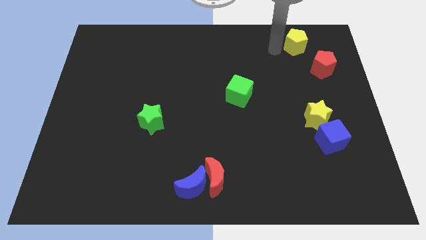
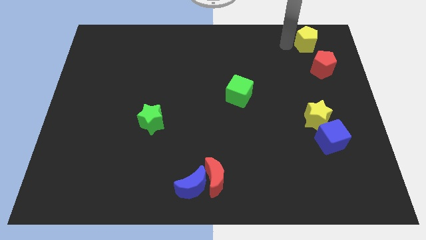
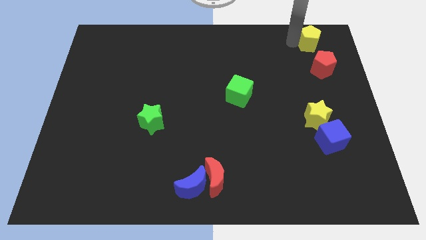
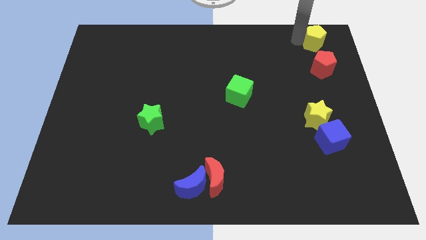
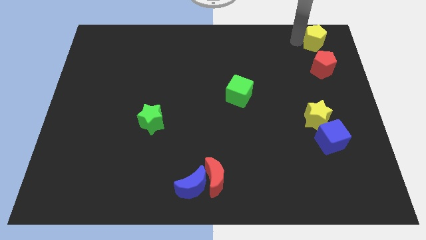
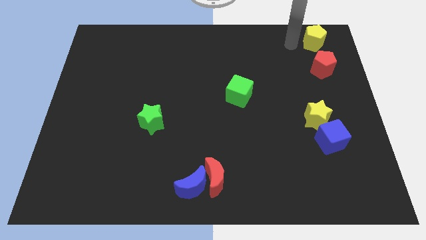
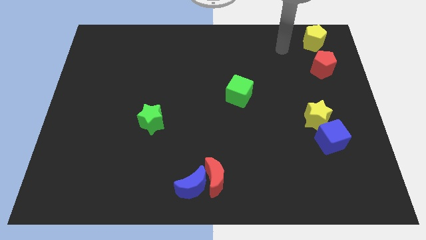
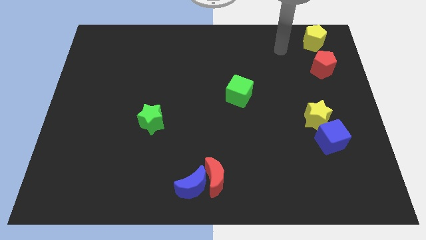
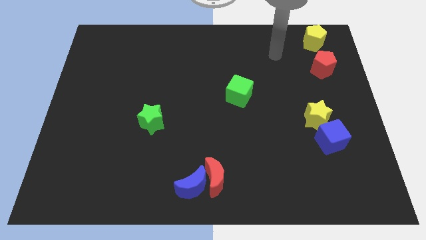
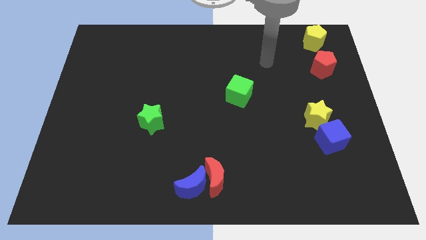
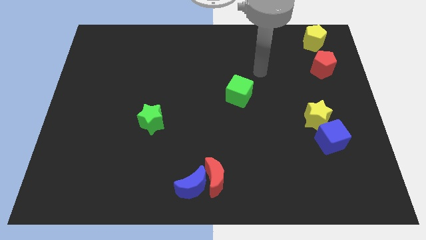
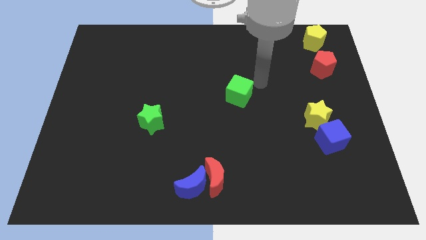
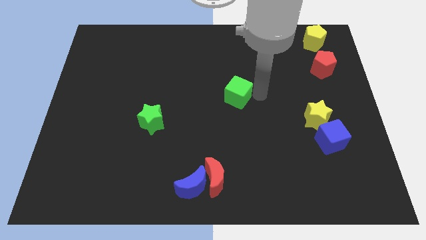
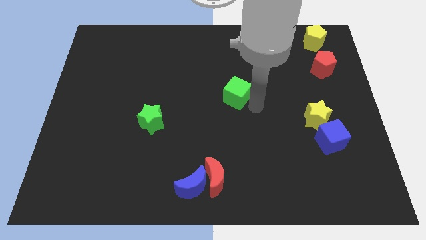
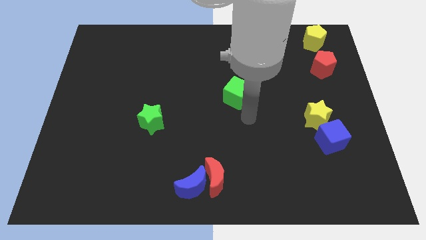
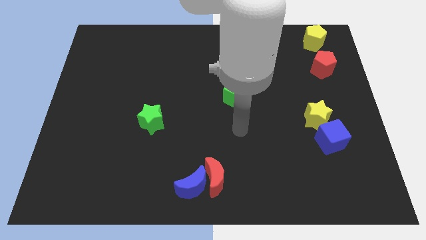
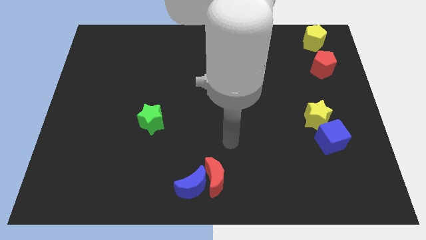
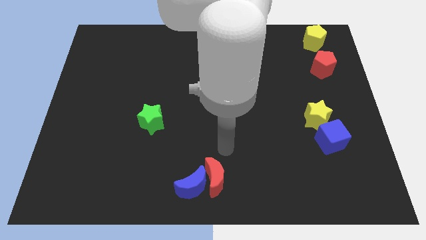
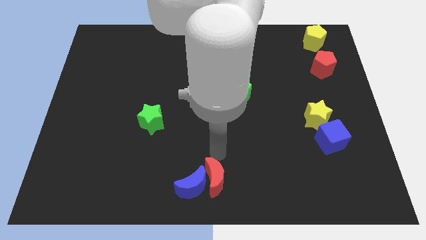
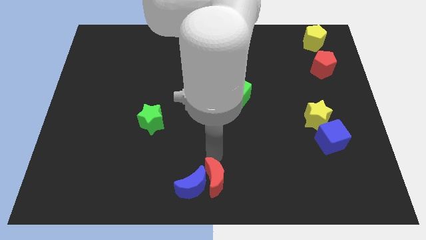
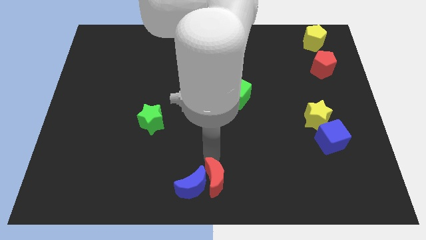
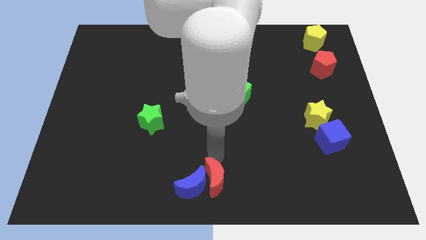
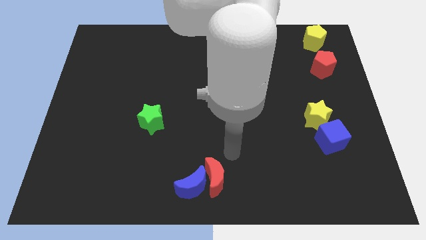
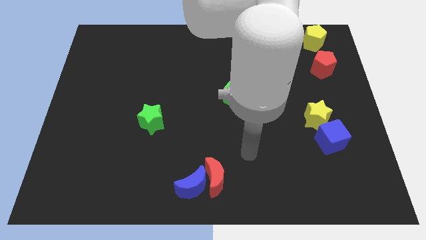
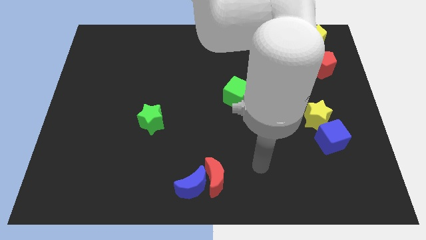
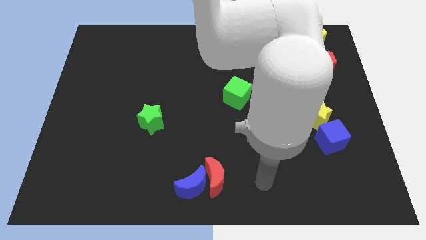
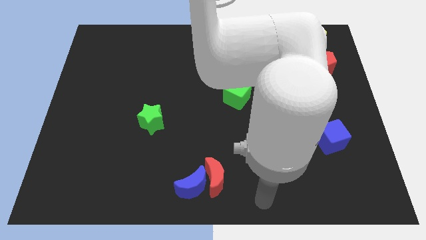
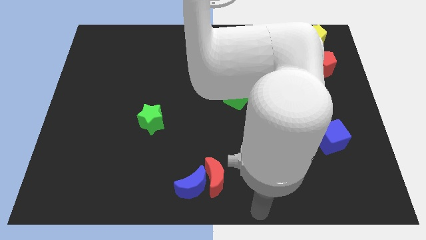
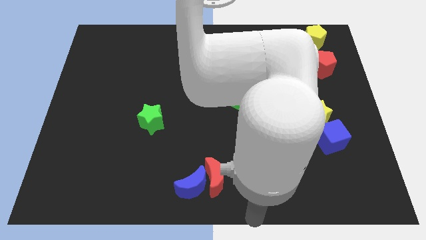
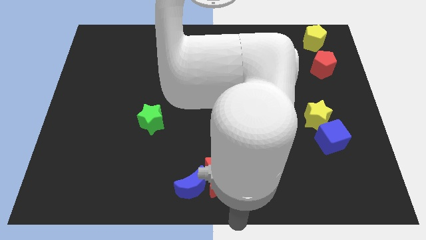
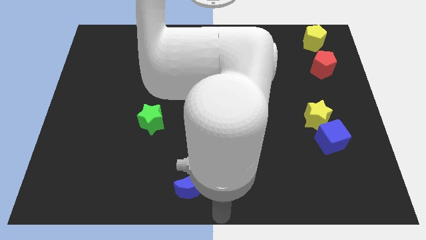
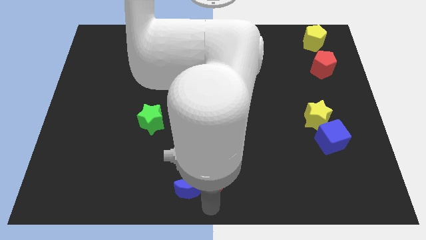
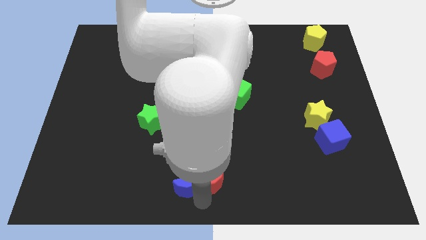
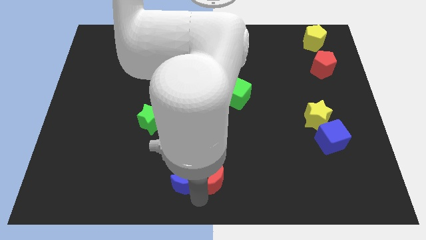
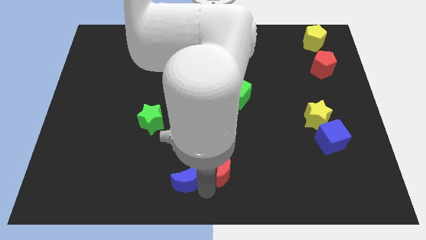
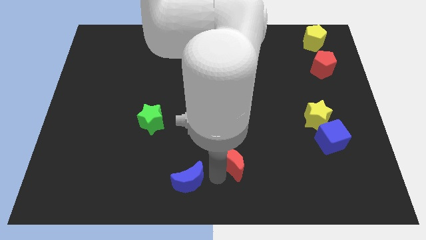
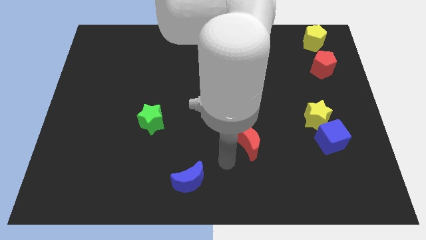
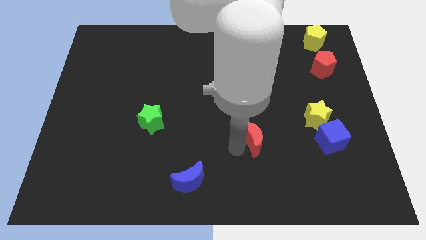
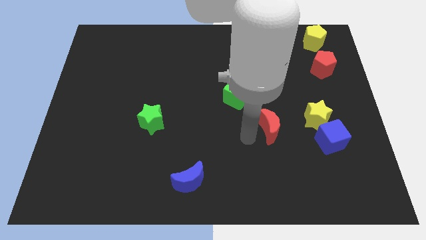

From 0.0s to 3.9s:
separate the red crescent from the blue crescent

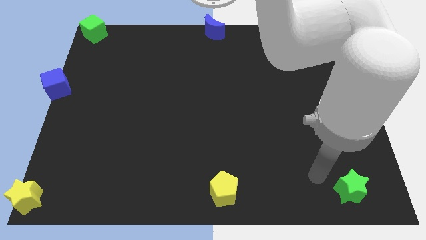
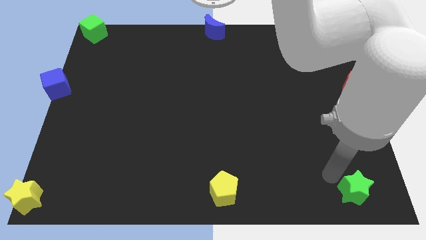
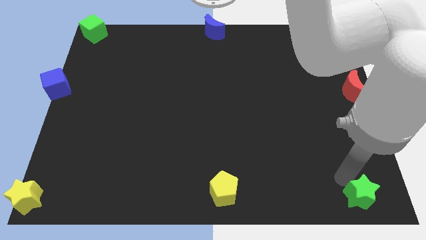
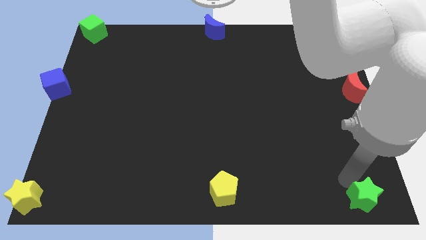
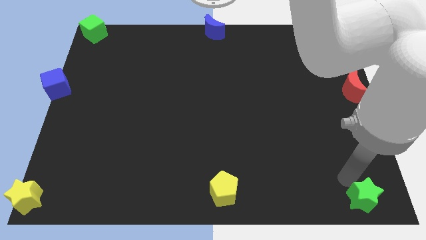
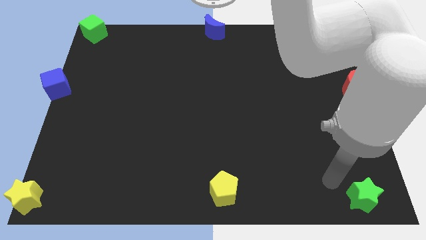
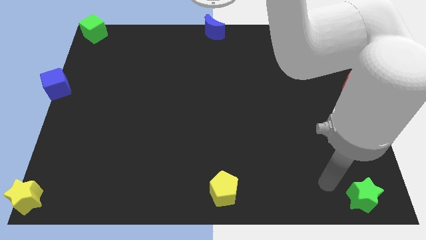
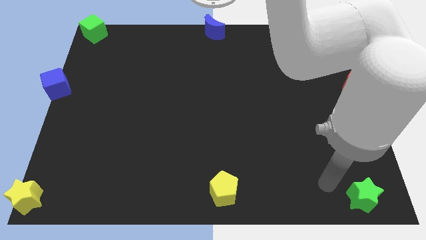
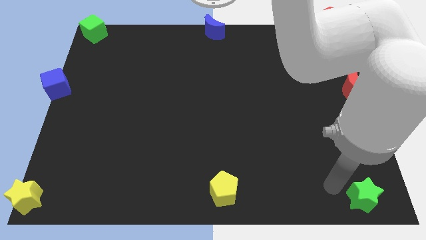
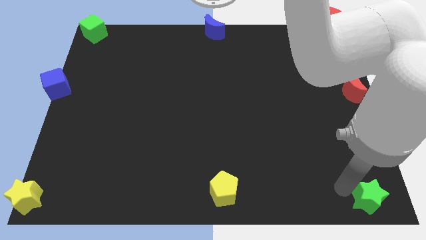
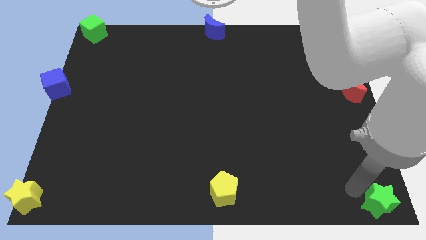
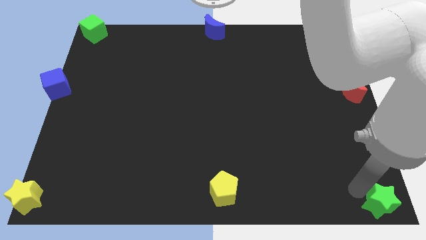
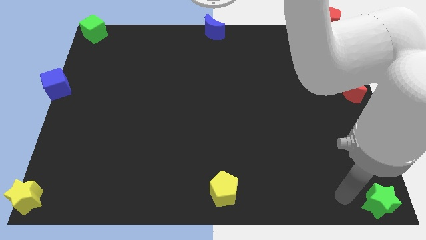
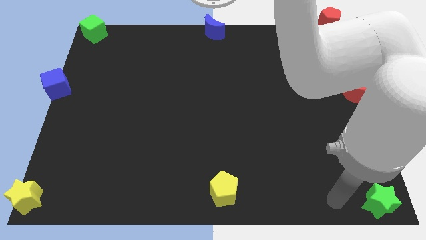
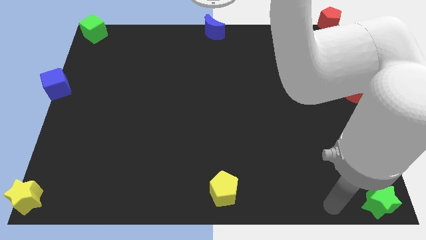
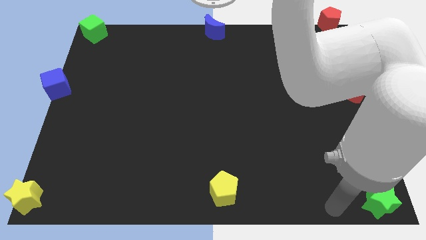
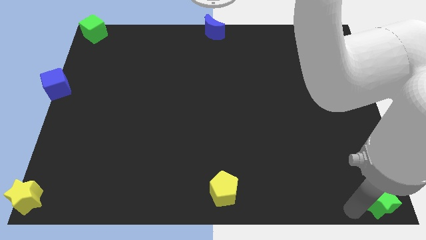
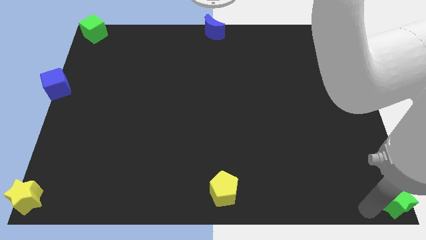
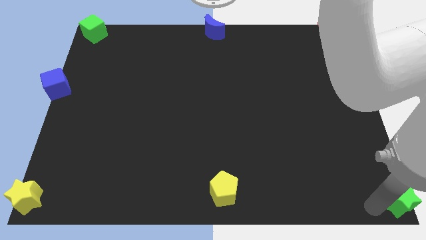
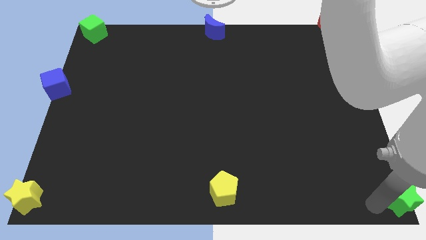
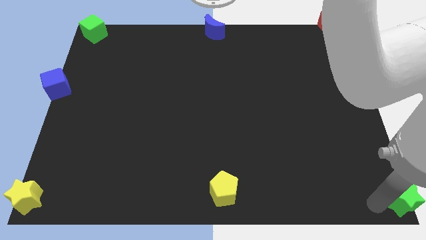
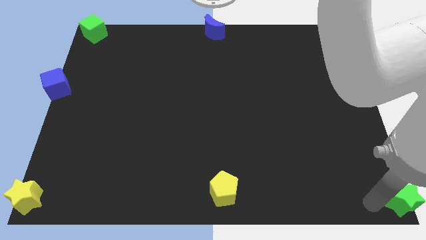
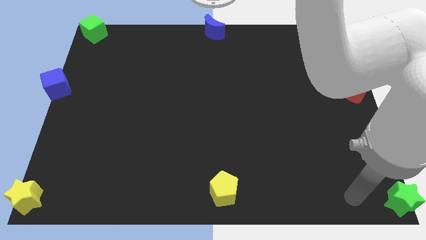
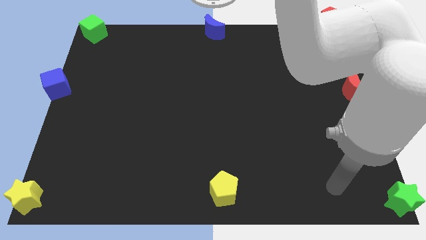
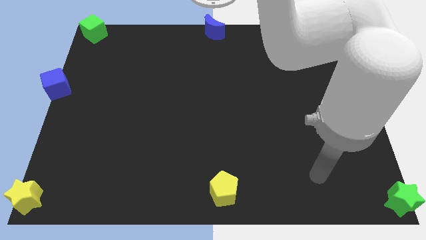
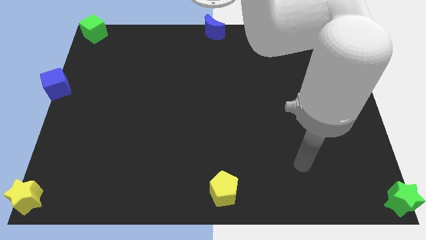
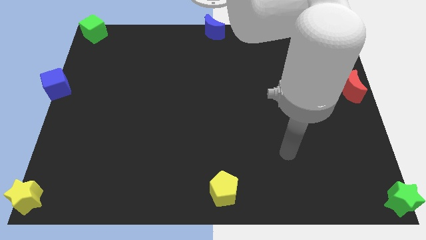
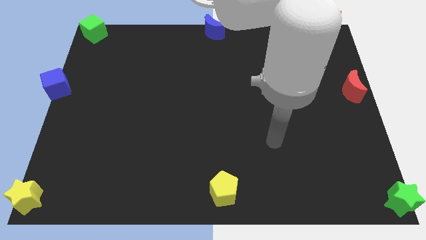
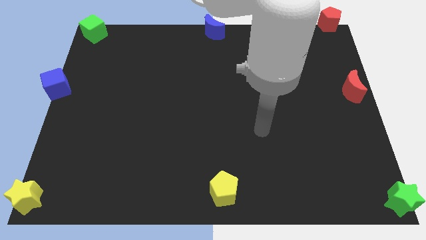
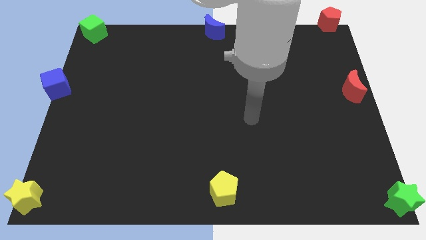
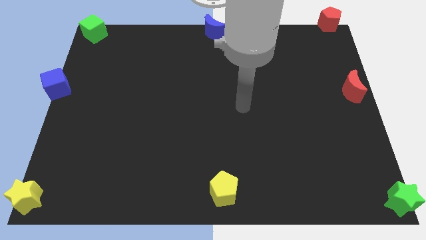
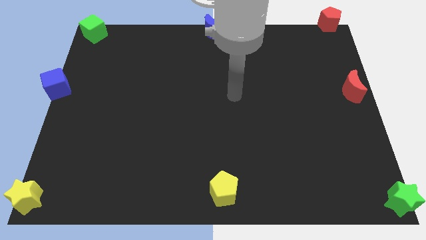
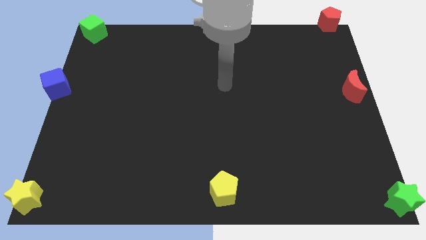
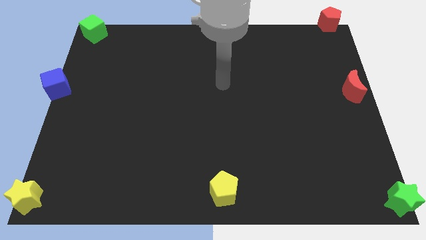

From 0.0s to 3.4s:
push the green star to the bottom right corner

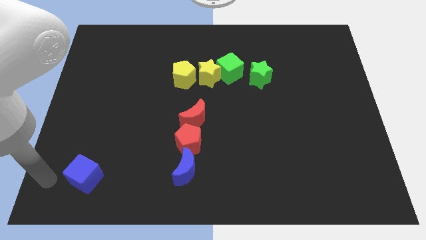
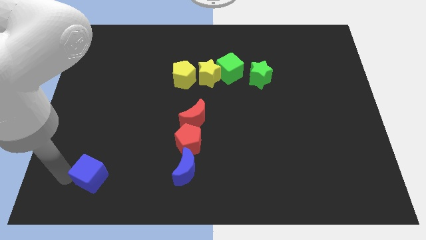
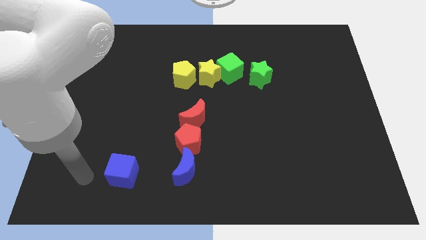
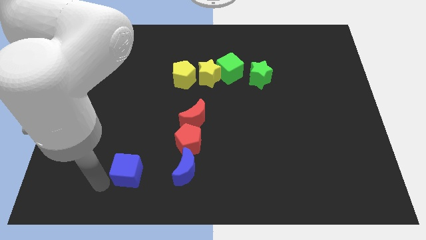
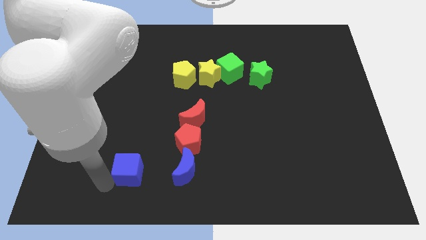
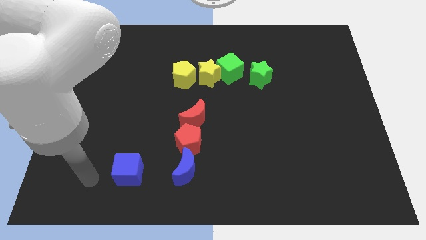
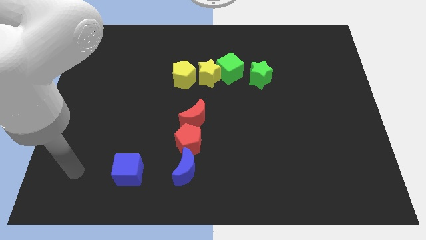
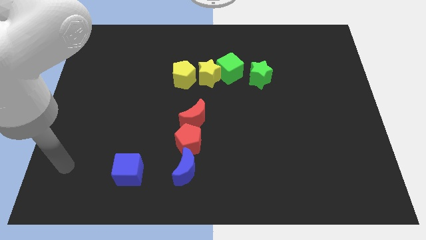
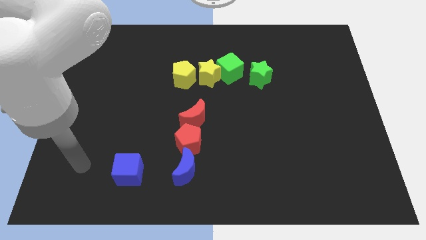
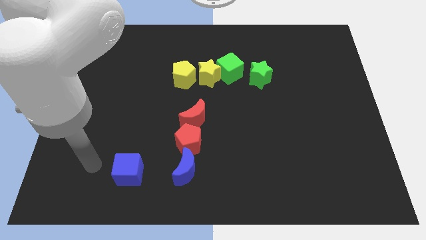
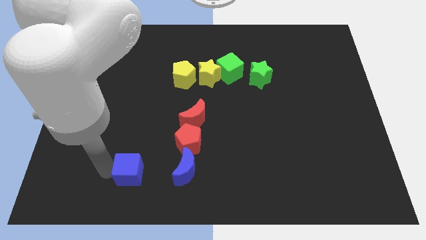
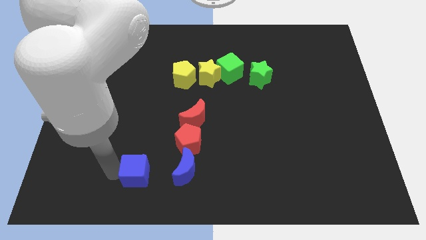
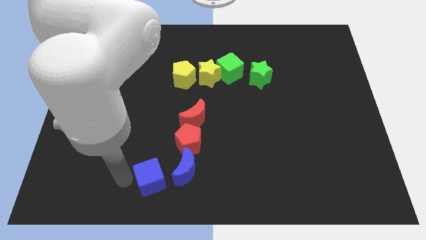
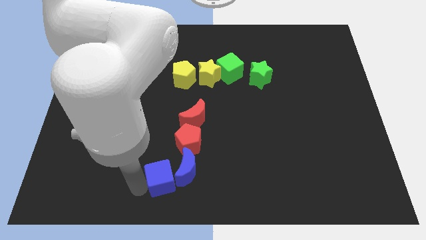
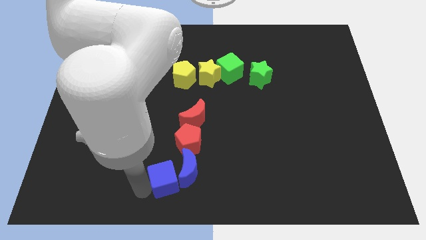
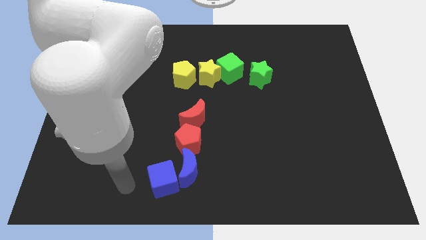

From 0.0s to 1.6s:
push the blue cube into the left of blue crescent
